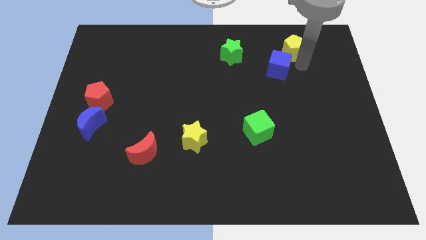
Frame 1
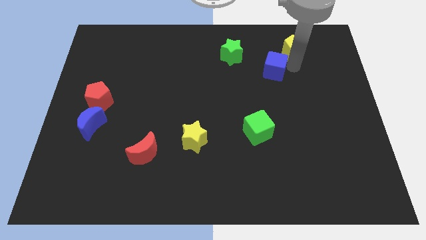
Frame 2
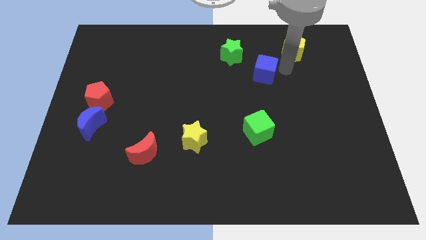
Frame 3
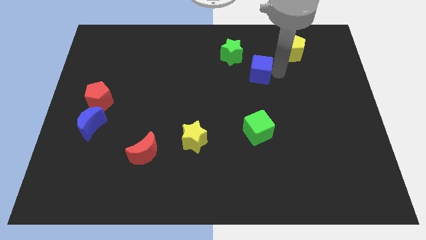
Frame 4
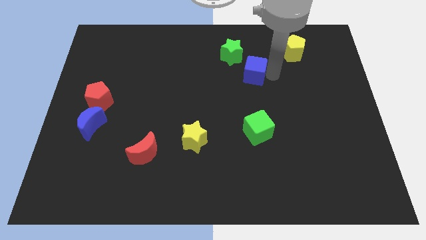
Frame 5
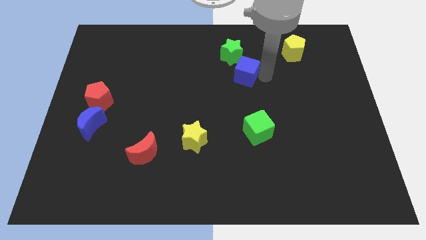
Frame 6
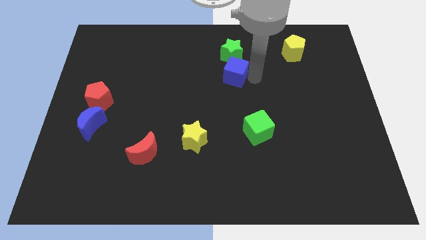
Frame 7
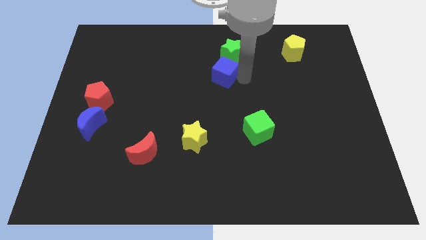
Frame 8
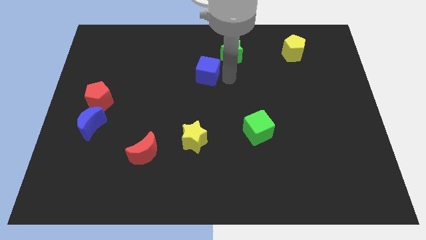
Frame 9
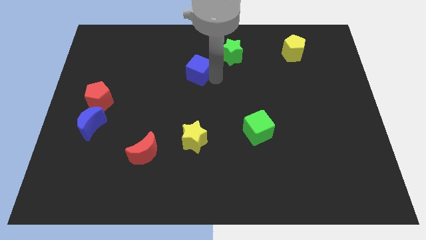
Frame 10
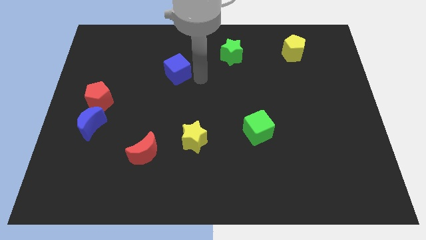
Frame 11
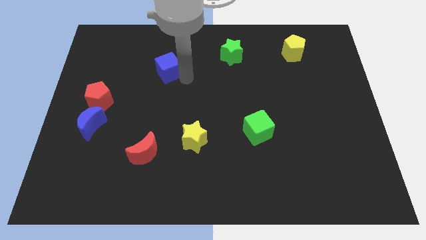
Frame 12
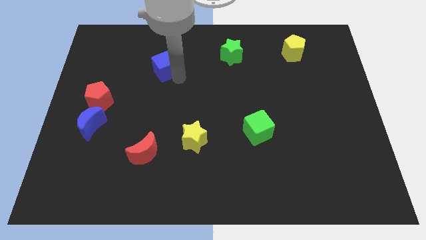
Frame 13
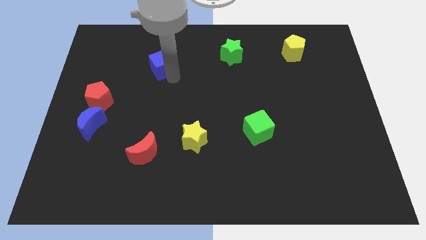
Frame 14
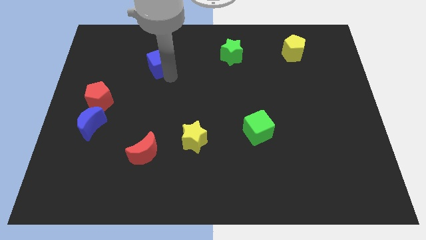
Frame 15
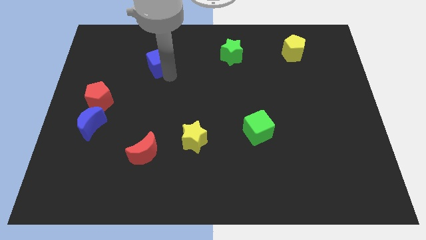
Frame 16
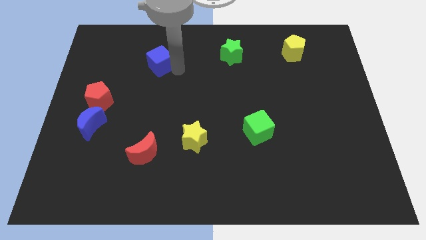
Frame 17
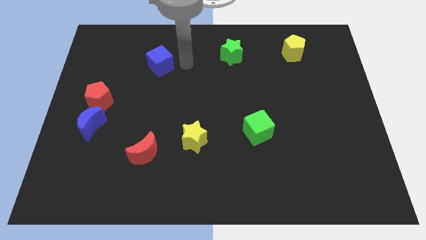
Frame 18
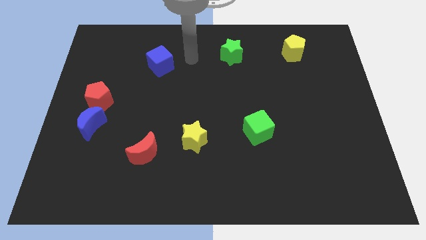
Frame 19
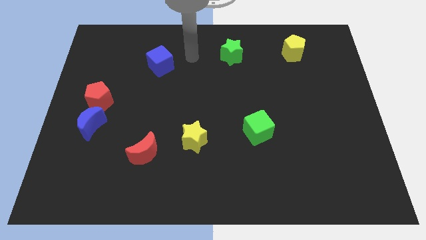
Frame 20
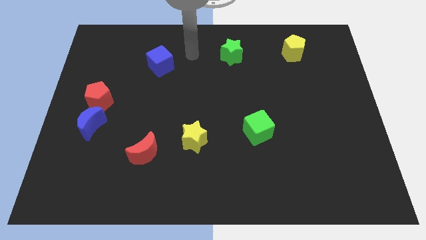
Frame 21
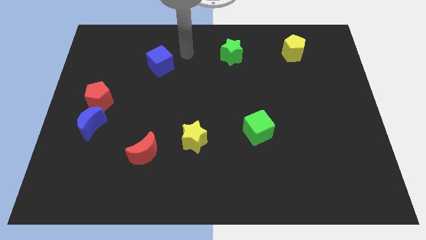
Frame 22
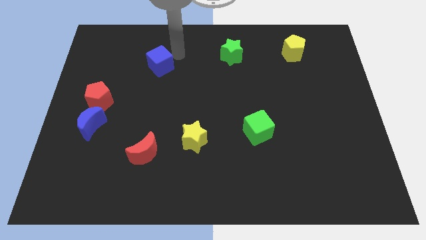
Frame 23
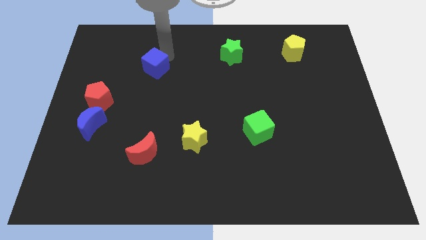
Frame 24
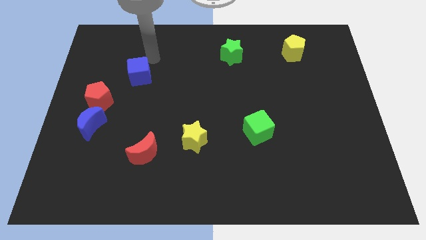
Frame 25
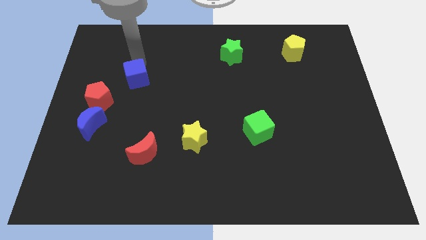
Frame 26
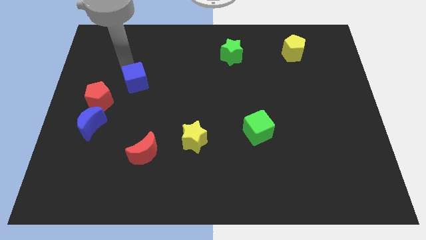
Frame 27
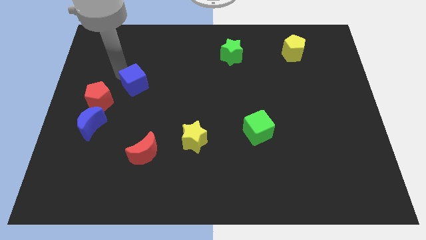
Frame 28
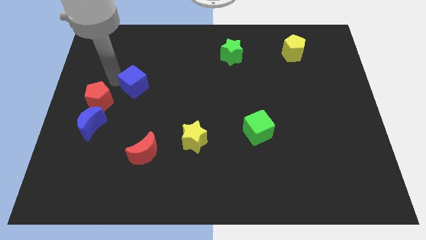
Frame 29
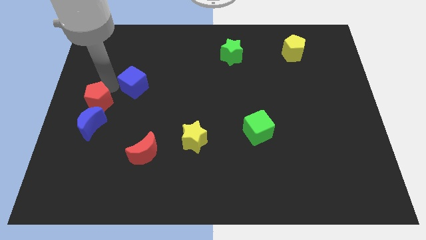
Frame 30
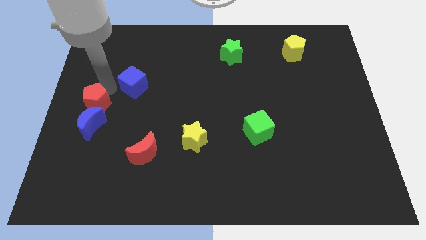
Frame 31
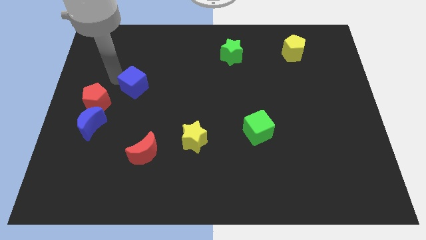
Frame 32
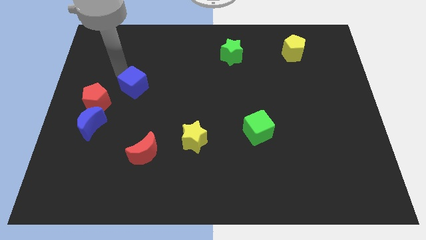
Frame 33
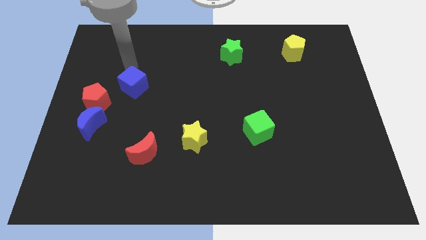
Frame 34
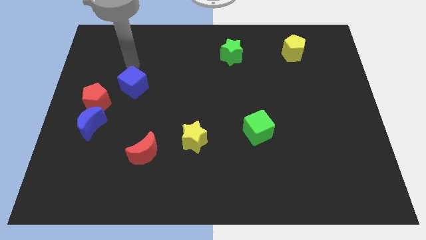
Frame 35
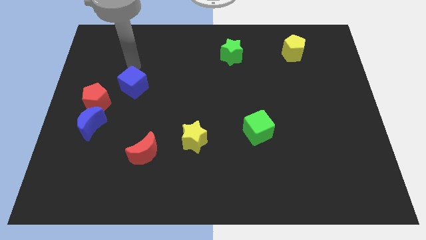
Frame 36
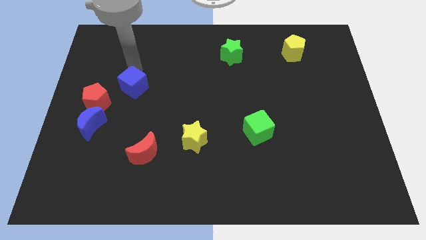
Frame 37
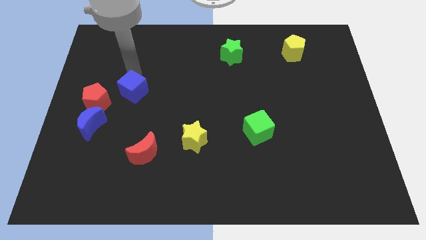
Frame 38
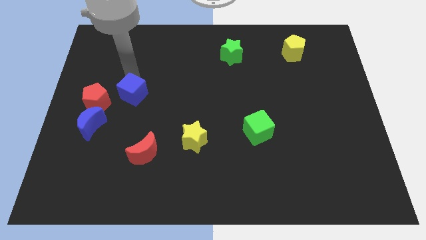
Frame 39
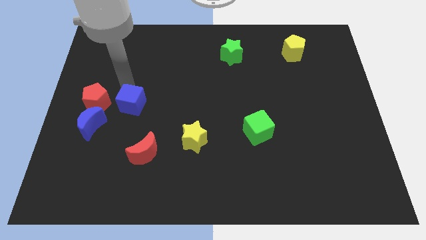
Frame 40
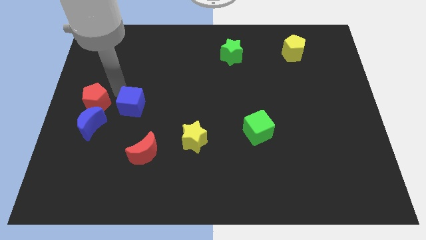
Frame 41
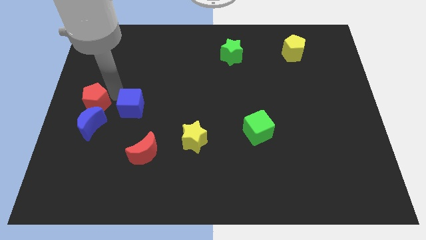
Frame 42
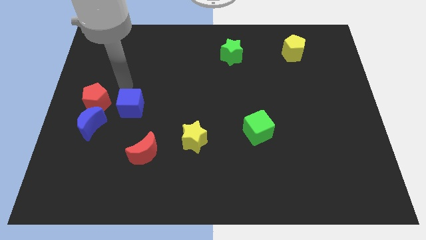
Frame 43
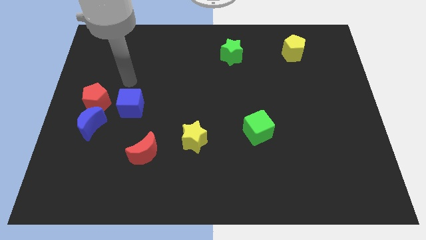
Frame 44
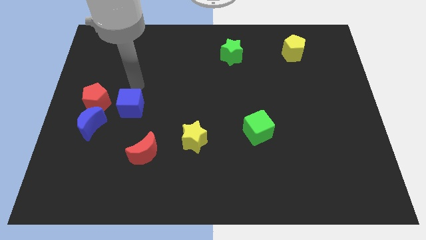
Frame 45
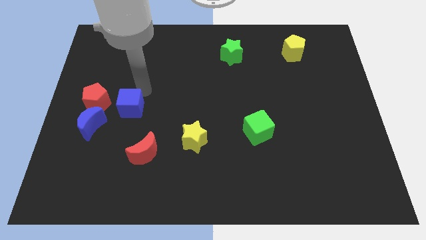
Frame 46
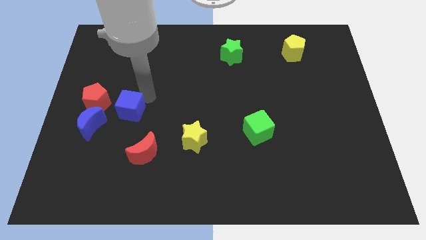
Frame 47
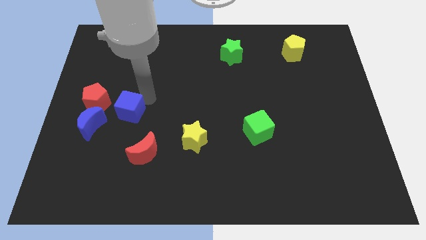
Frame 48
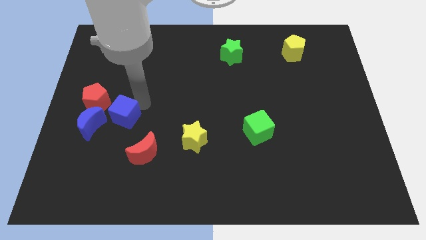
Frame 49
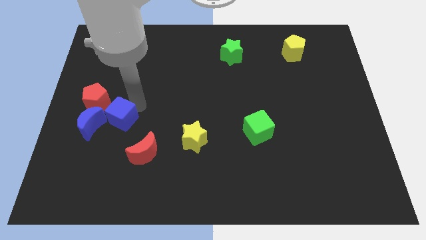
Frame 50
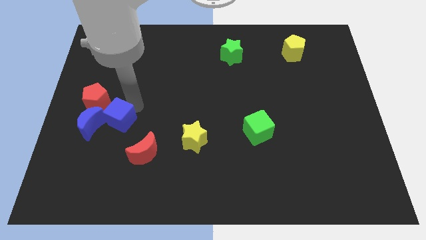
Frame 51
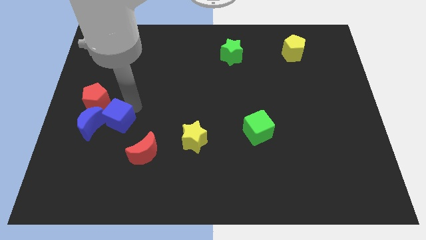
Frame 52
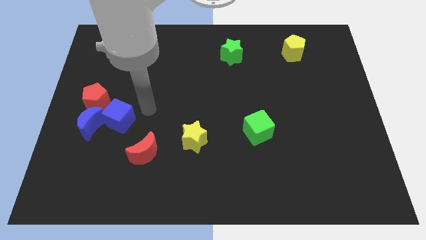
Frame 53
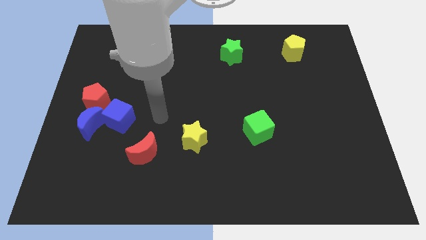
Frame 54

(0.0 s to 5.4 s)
put the blue cube on the right side of the blue crescent

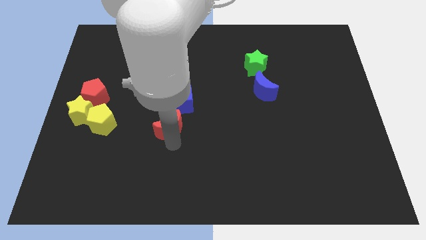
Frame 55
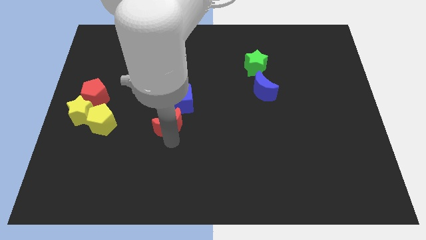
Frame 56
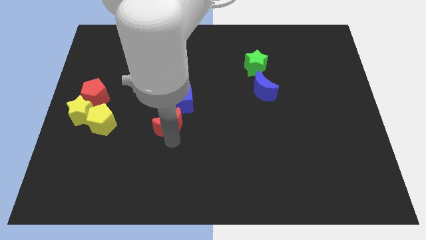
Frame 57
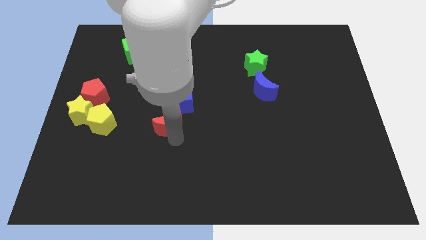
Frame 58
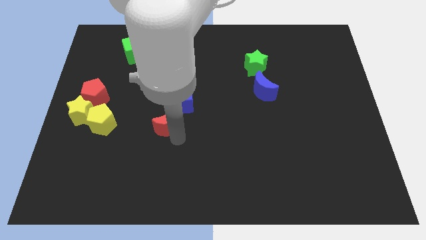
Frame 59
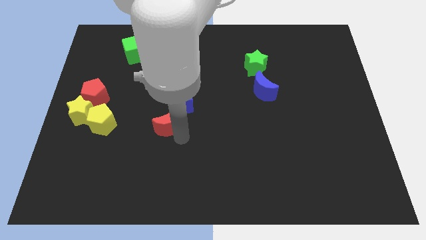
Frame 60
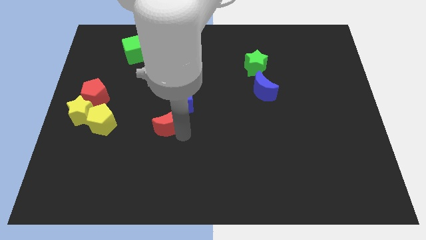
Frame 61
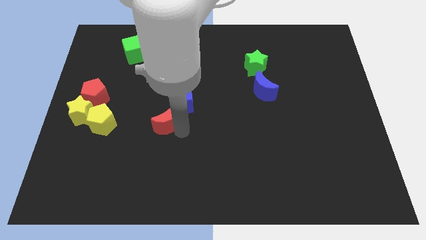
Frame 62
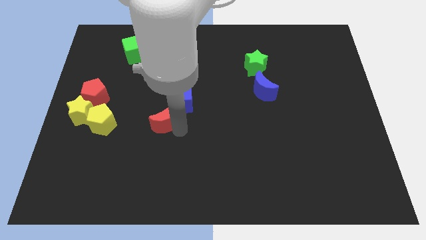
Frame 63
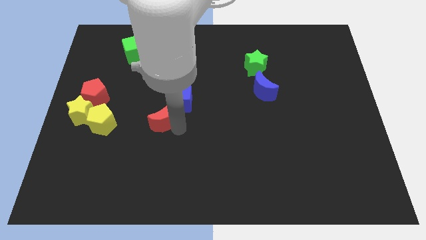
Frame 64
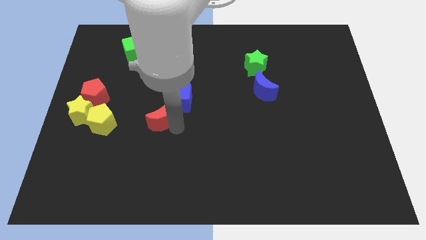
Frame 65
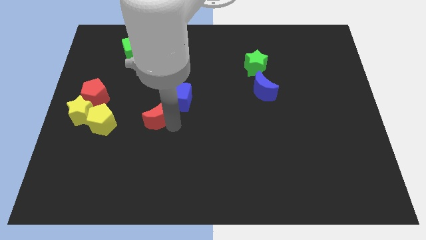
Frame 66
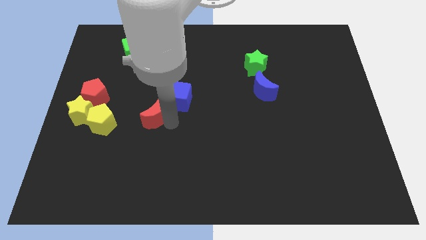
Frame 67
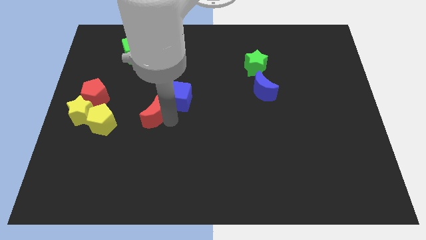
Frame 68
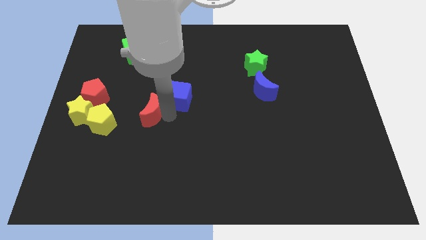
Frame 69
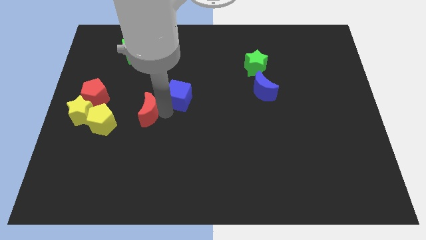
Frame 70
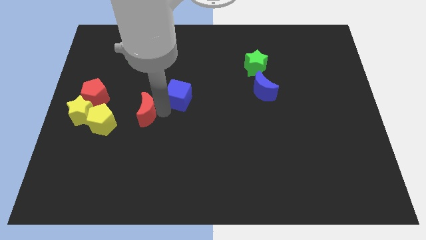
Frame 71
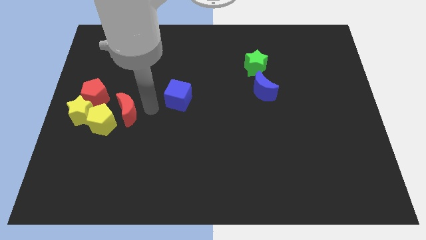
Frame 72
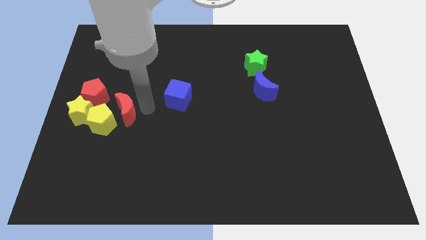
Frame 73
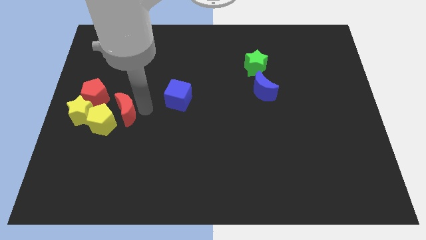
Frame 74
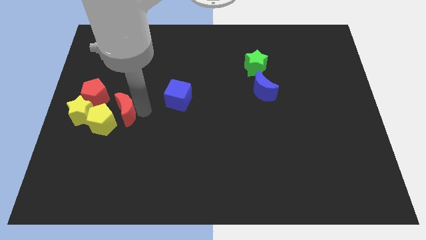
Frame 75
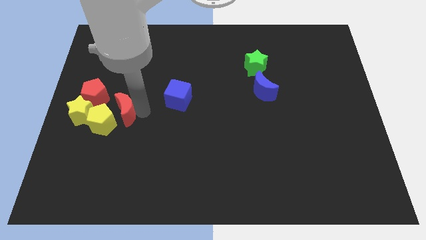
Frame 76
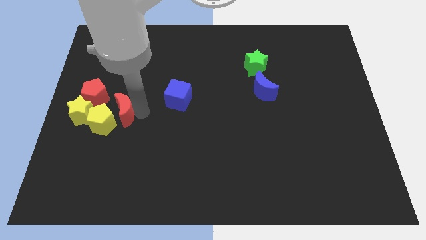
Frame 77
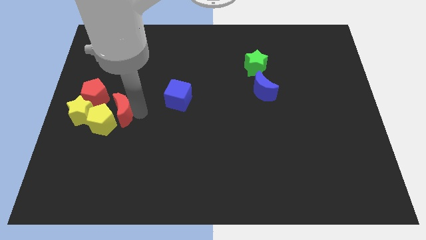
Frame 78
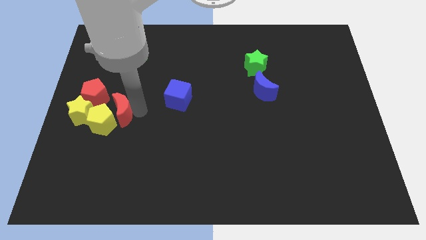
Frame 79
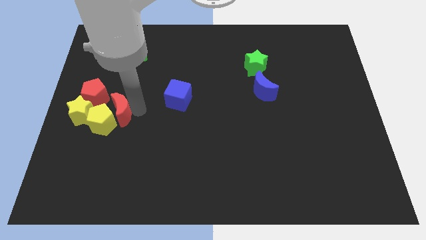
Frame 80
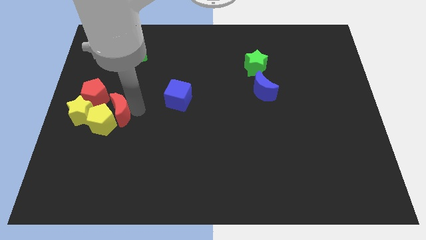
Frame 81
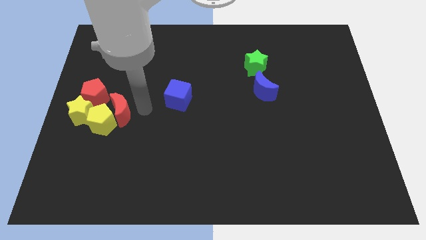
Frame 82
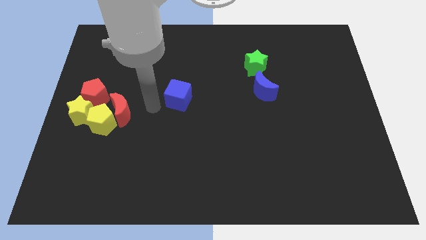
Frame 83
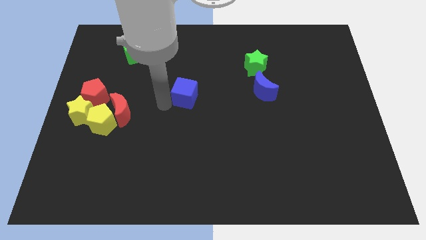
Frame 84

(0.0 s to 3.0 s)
move the red moon towards the yellow blocks

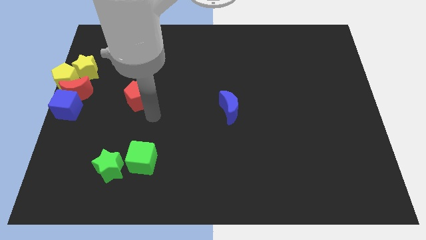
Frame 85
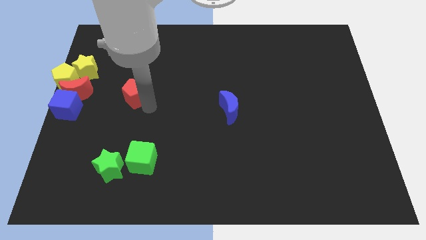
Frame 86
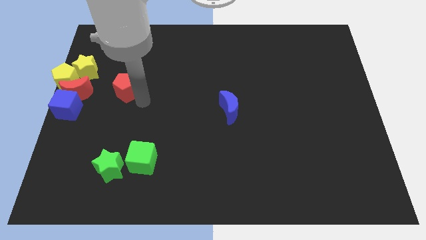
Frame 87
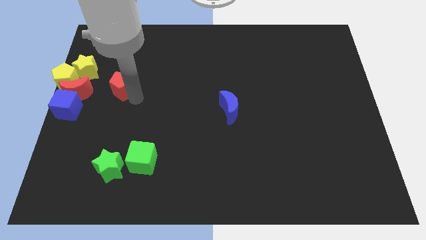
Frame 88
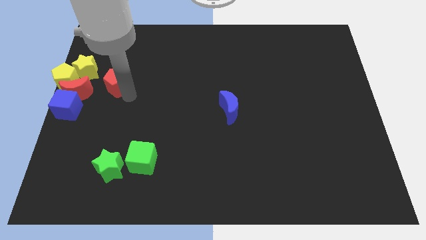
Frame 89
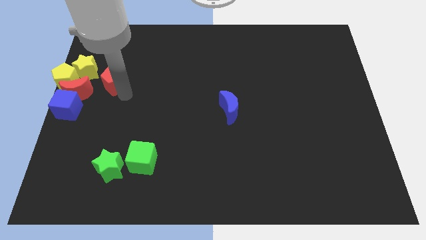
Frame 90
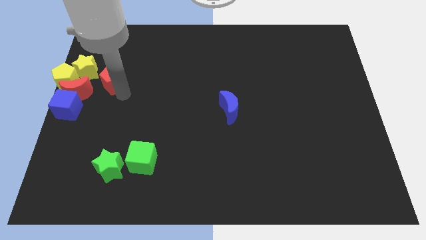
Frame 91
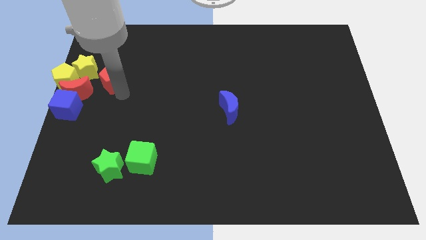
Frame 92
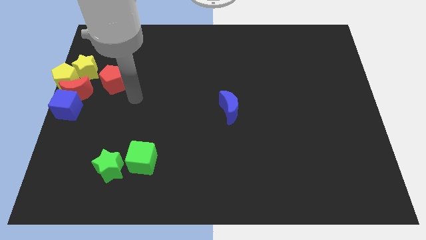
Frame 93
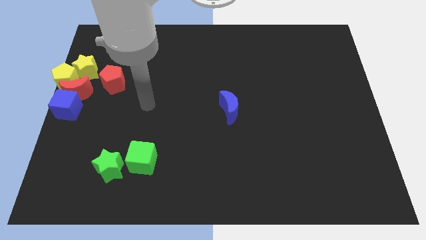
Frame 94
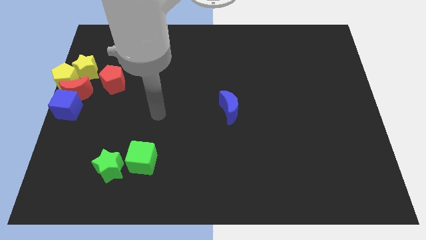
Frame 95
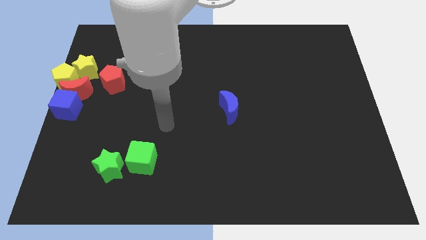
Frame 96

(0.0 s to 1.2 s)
slide the red pentagon towards the yellow star
